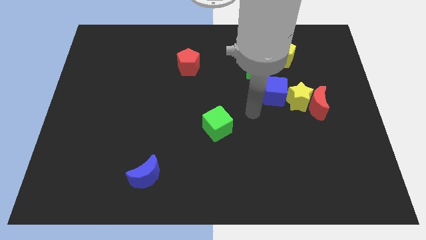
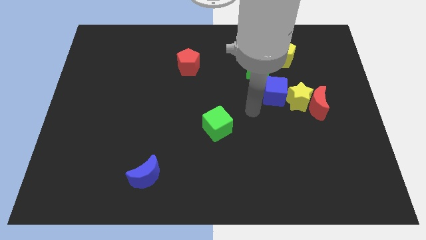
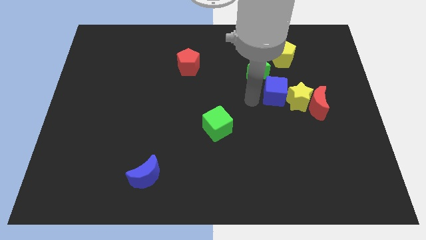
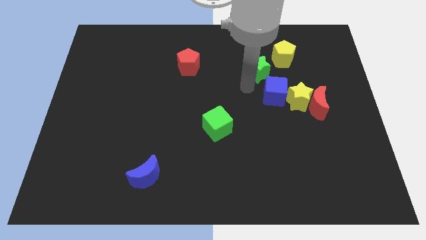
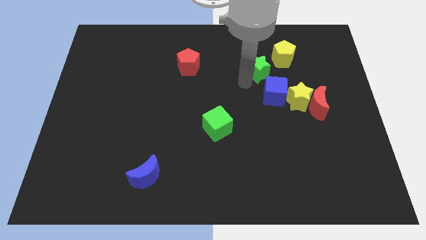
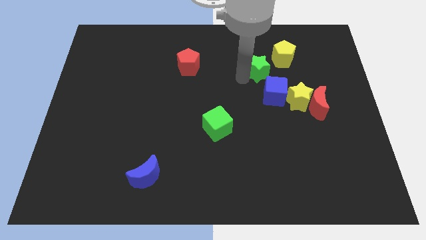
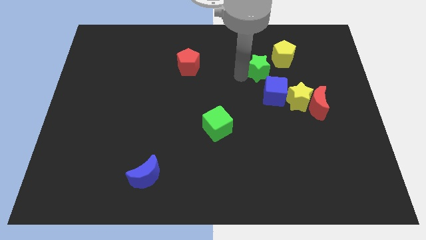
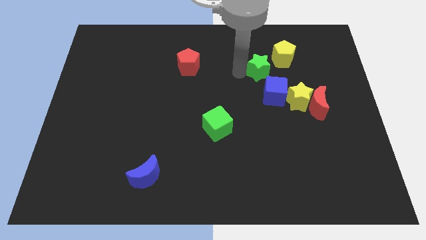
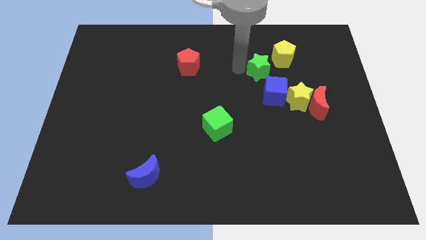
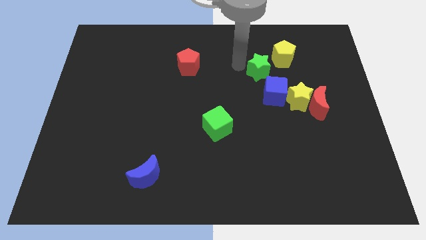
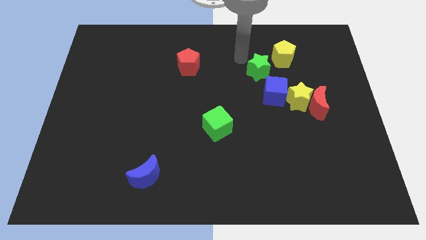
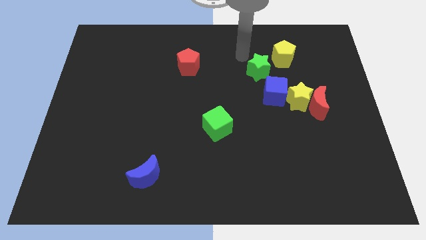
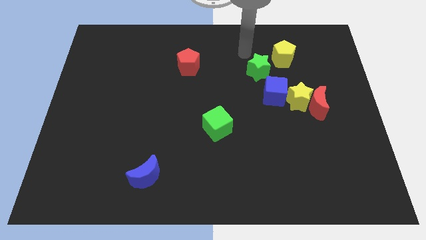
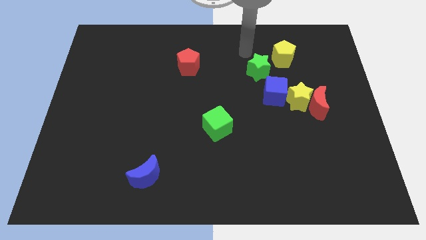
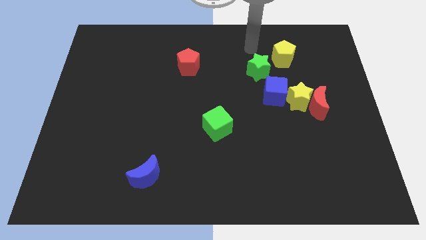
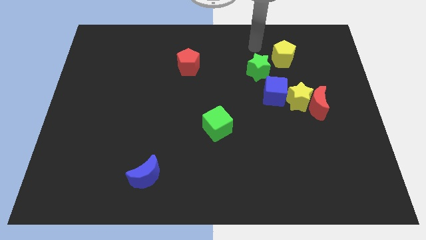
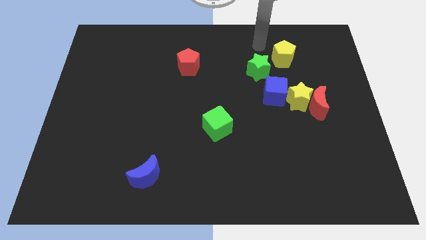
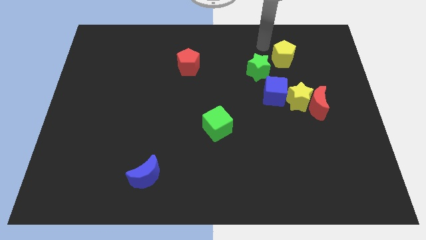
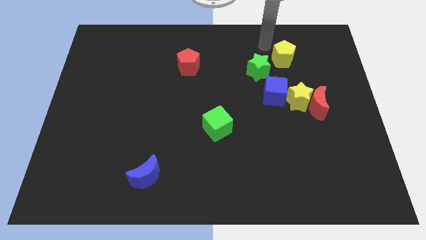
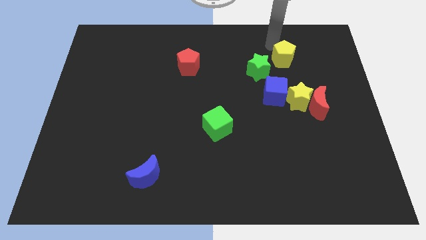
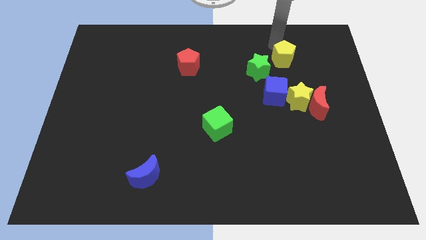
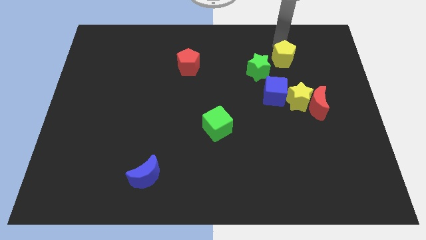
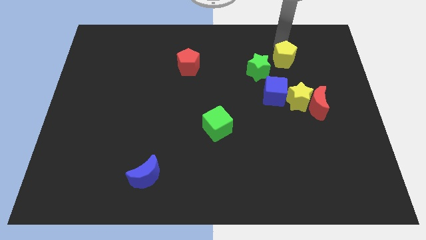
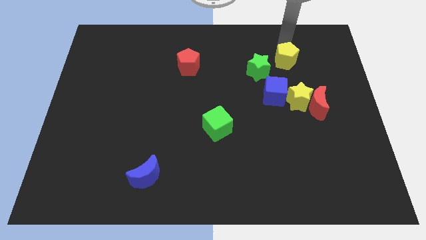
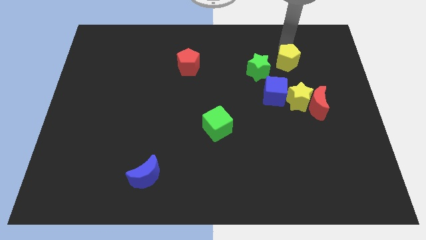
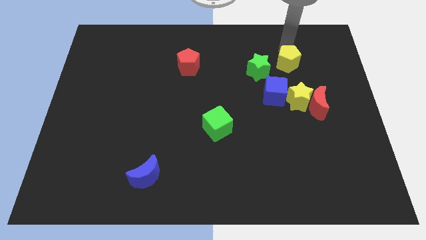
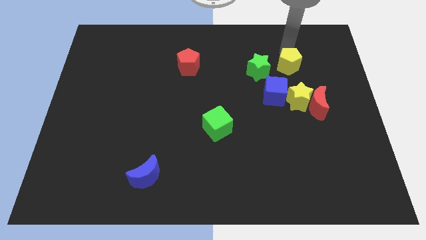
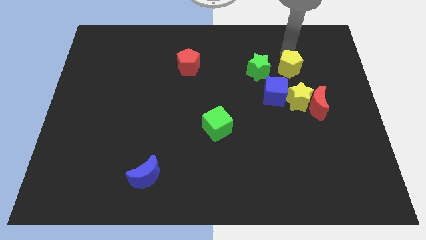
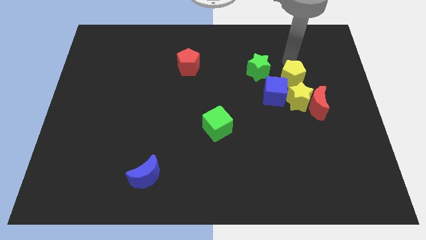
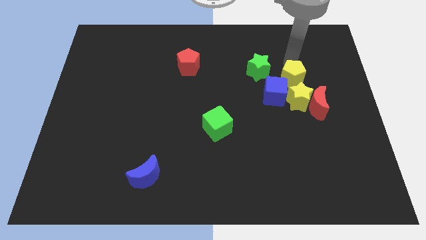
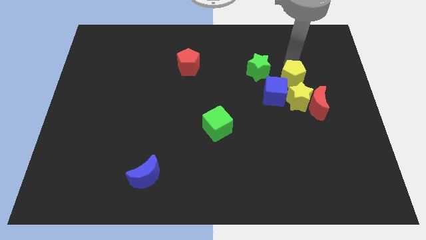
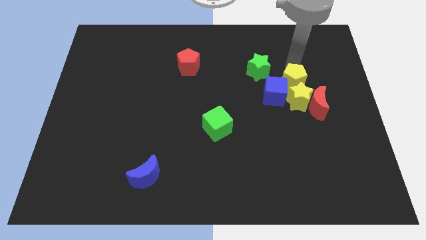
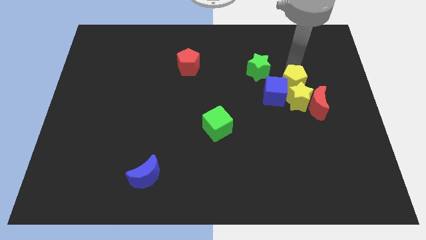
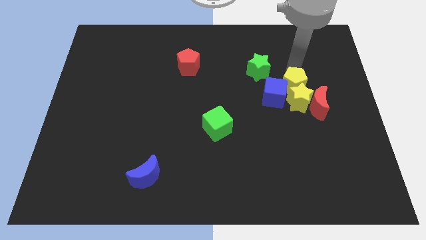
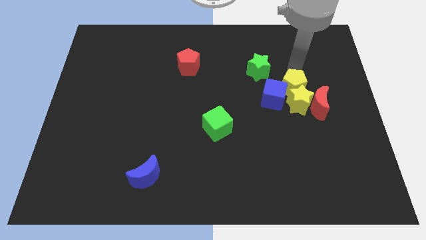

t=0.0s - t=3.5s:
put the yellow pentagon close to the yellow star

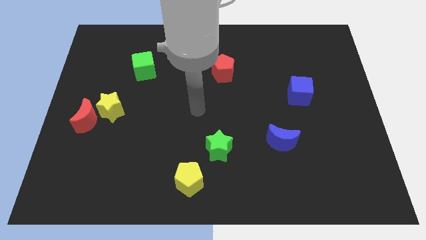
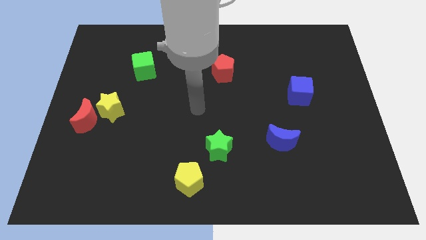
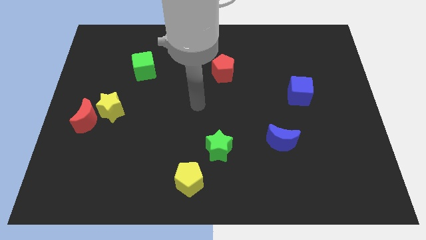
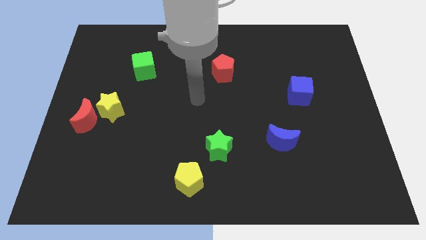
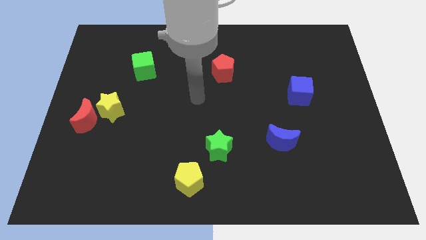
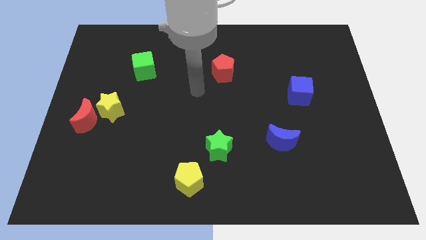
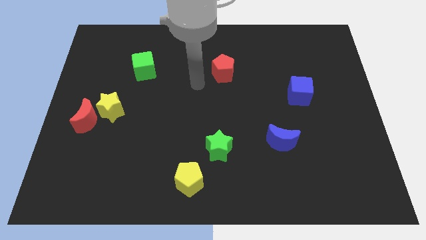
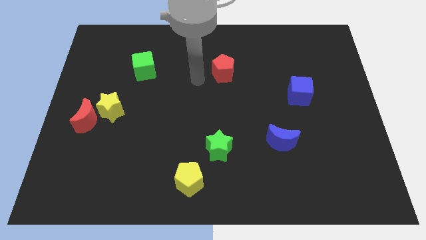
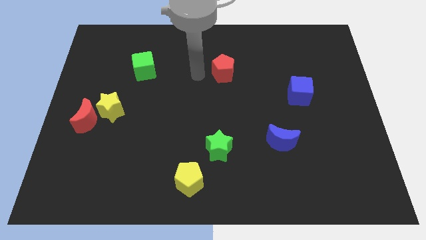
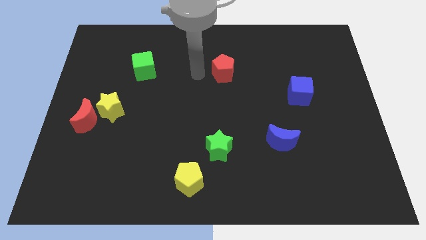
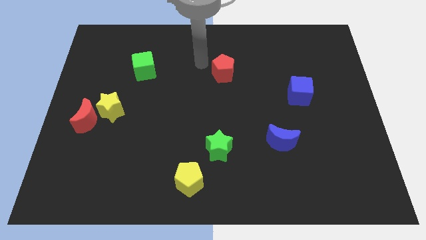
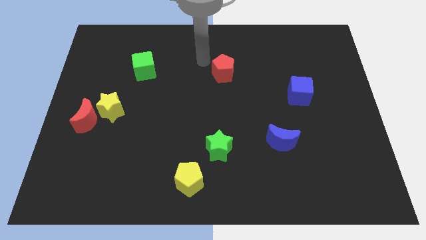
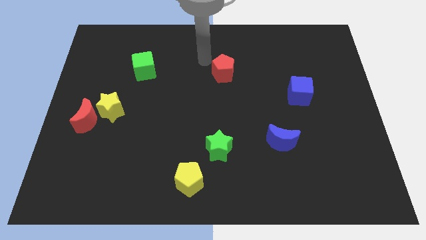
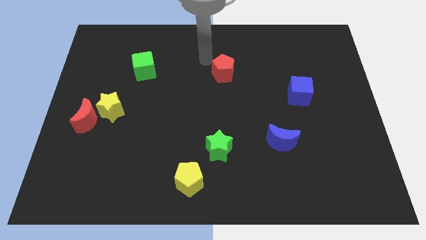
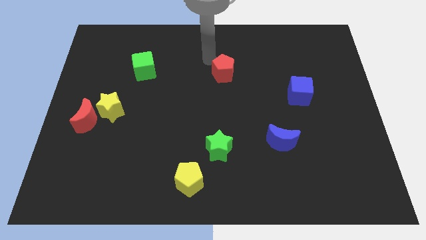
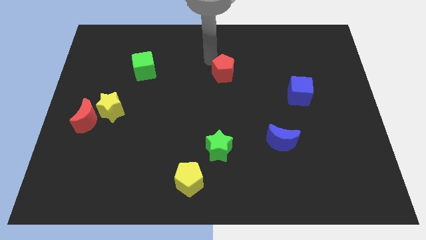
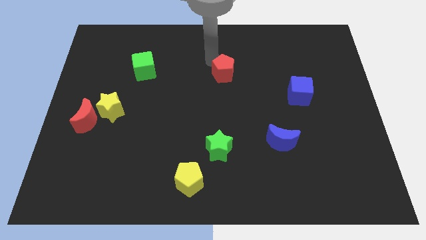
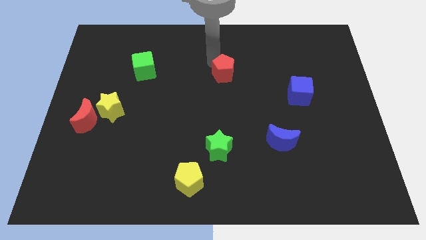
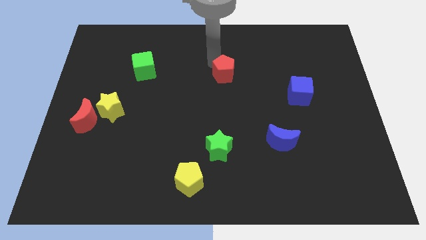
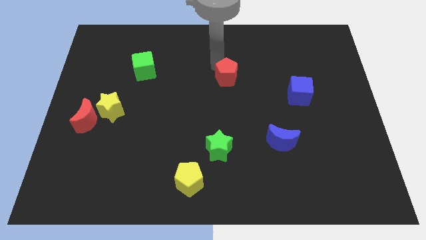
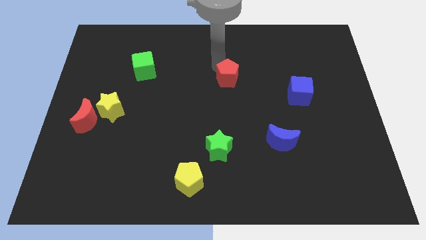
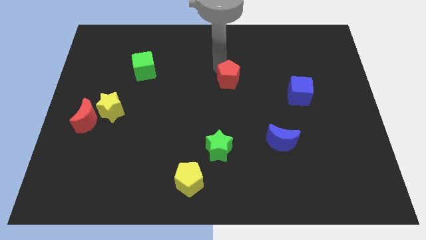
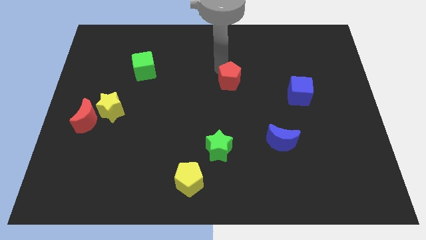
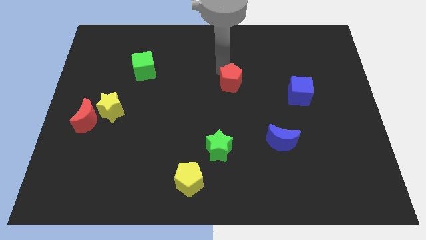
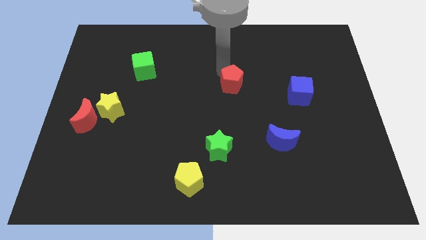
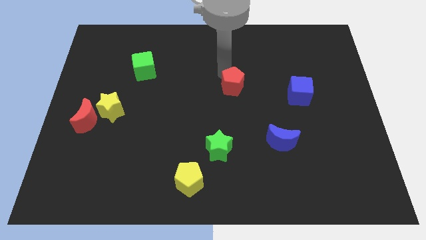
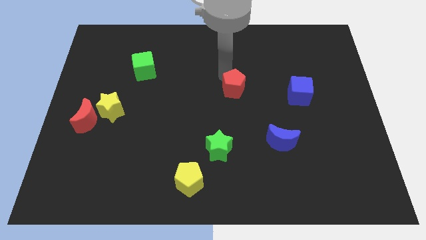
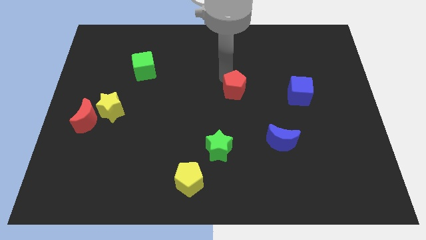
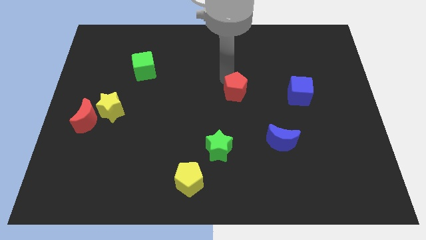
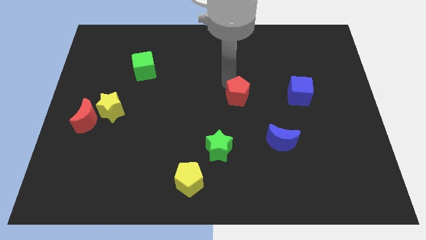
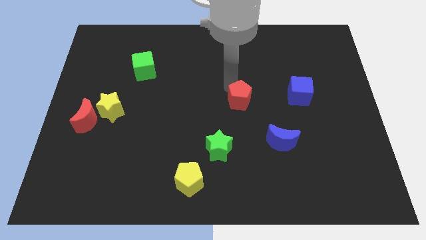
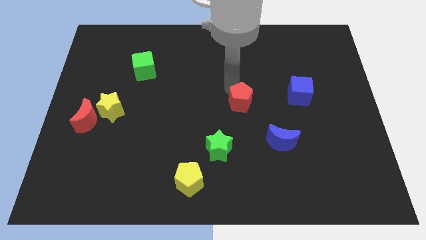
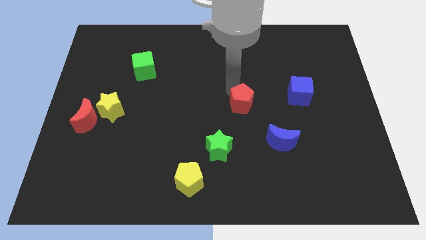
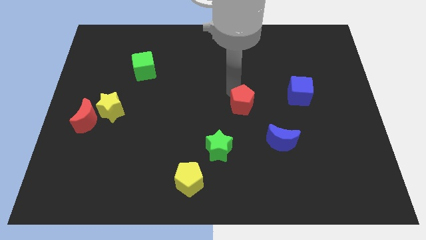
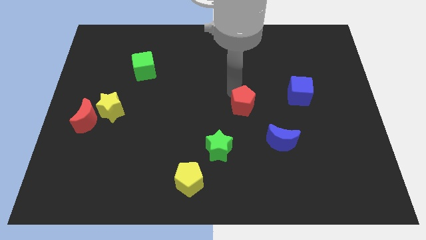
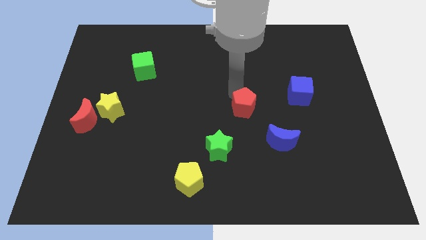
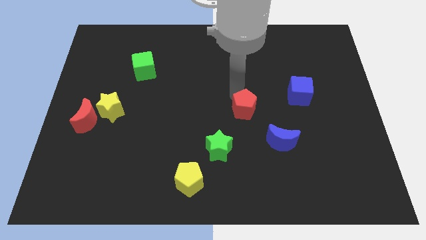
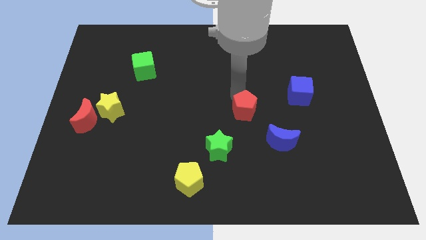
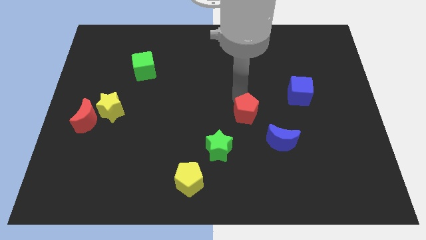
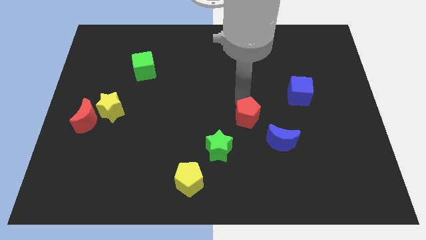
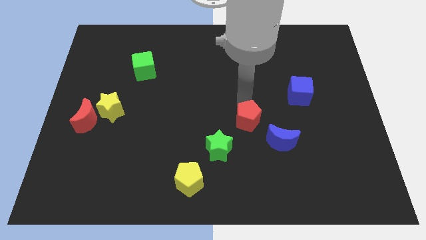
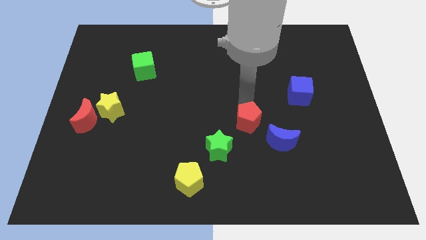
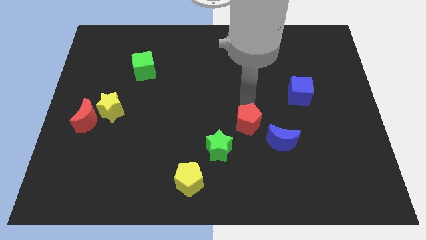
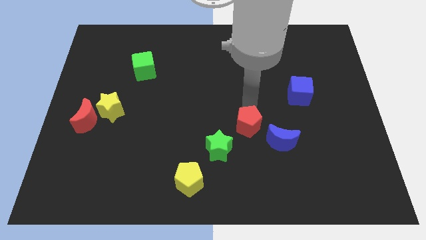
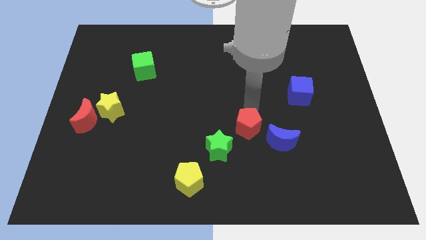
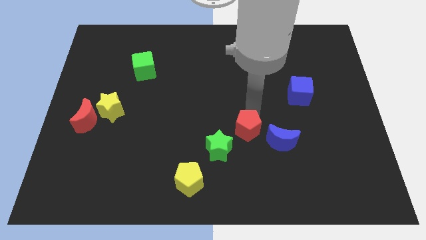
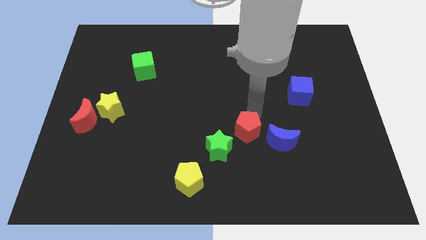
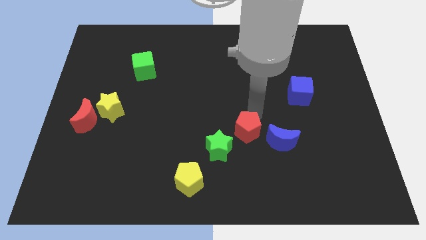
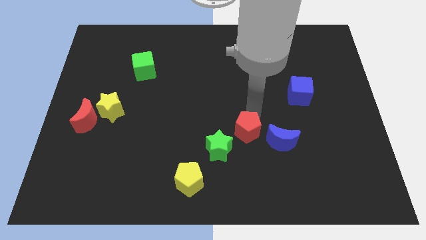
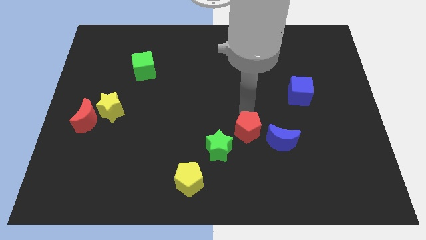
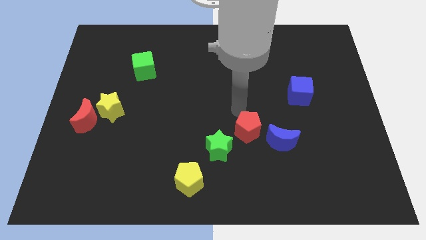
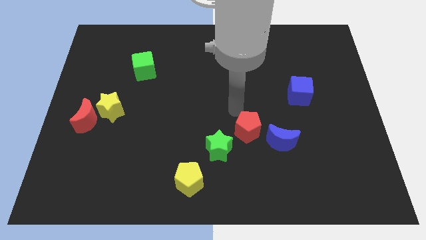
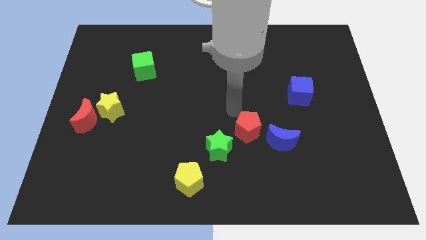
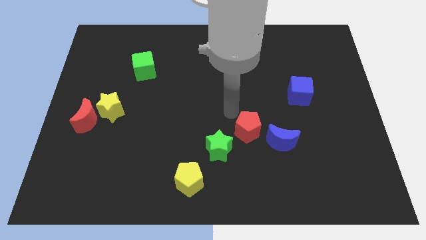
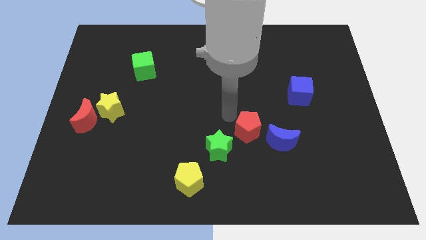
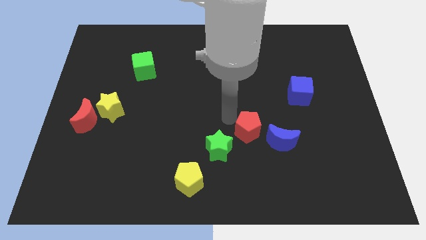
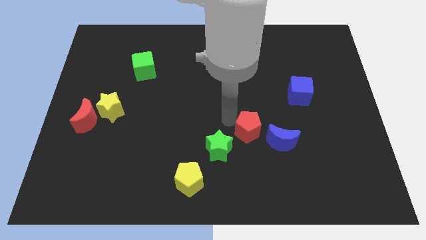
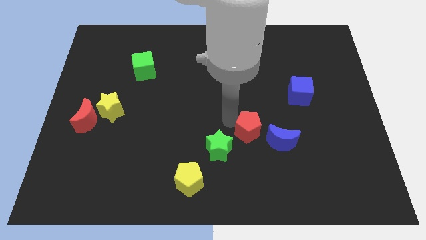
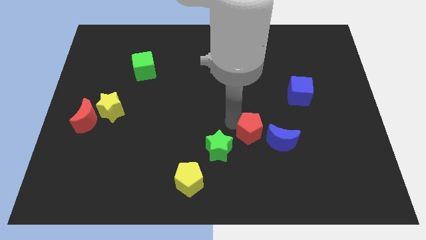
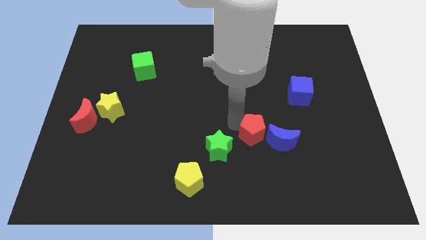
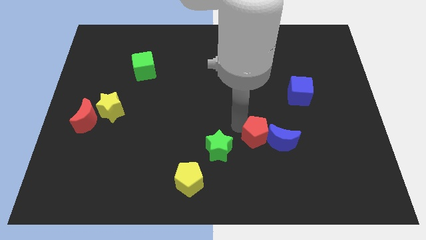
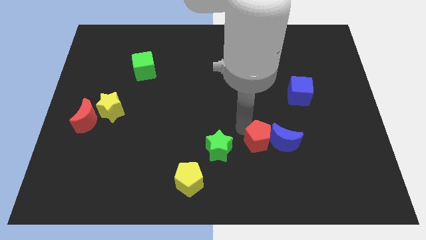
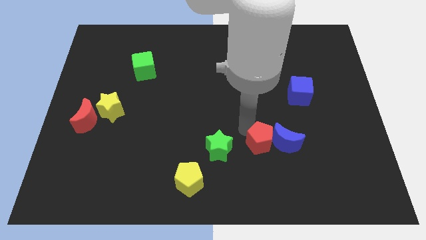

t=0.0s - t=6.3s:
move the red pentagon to the blue moon
